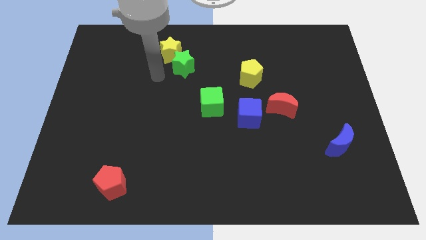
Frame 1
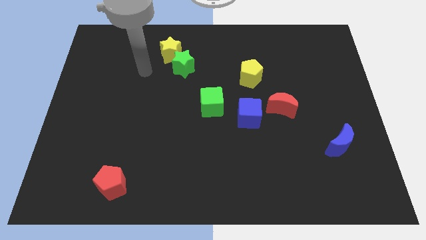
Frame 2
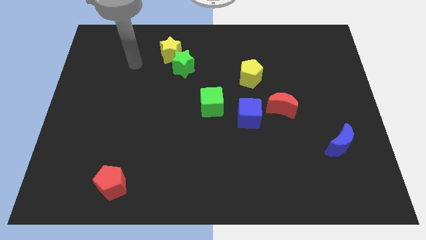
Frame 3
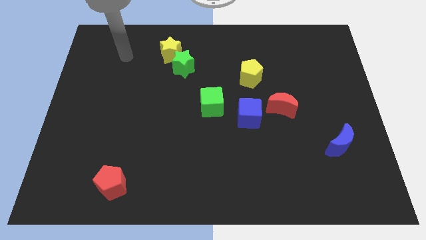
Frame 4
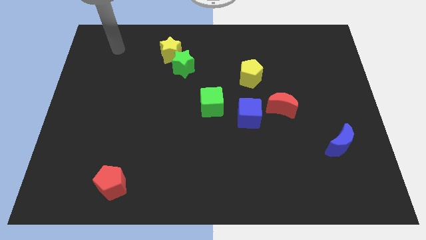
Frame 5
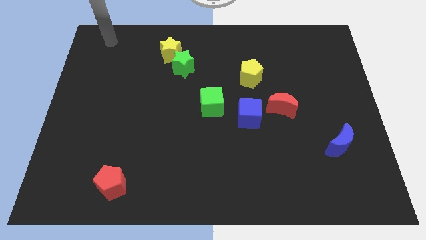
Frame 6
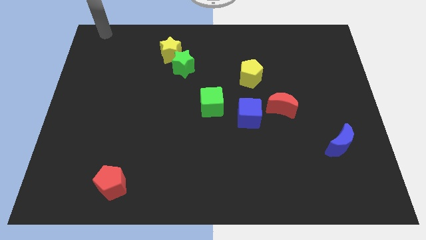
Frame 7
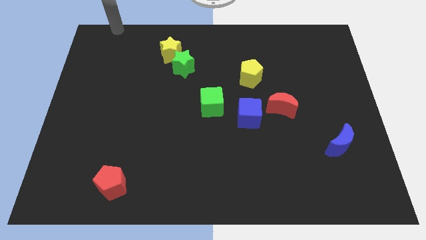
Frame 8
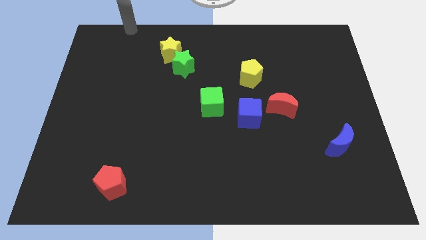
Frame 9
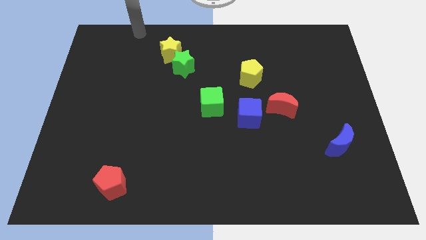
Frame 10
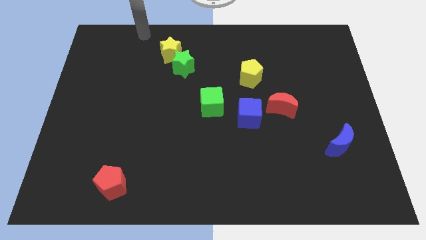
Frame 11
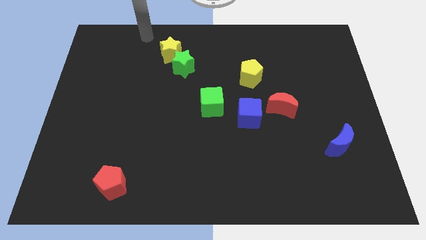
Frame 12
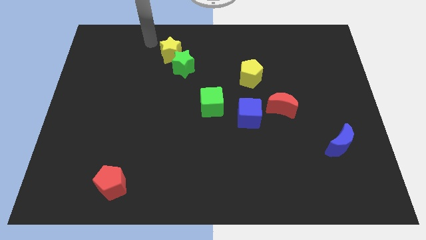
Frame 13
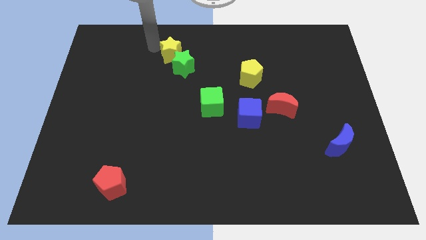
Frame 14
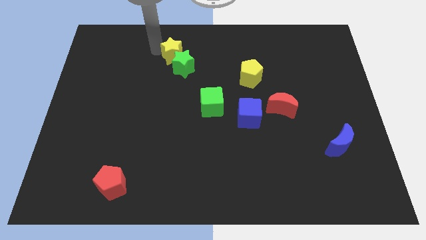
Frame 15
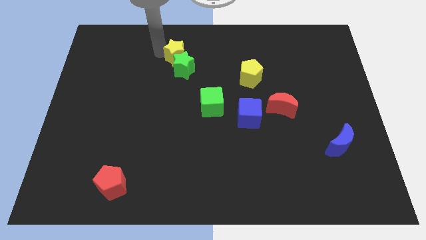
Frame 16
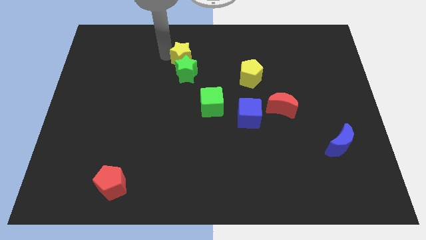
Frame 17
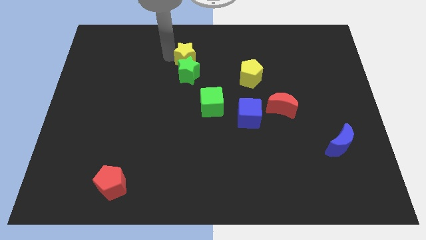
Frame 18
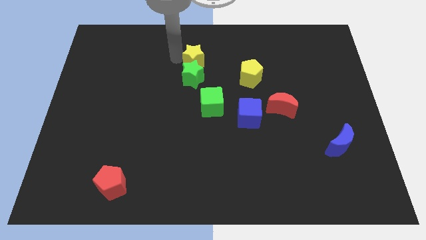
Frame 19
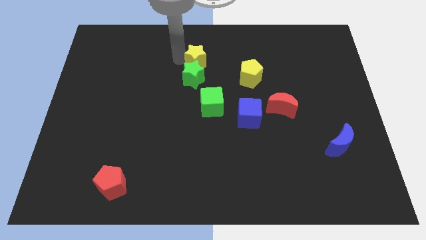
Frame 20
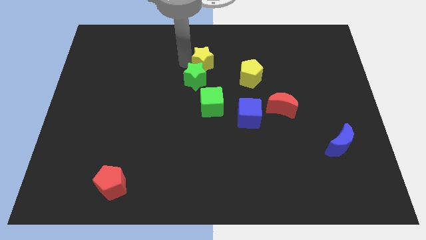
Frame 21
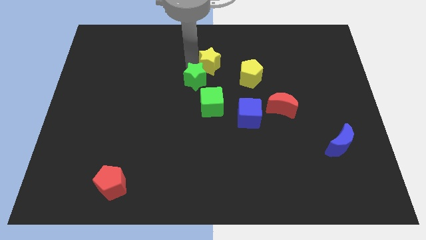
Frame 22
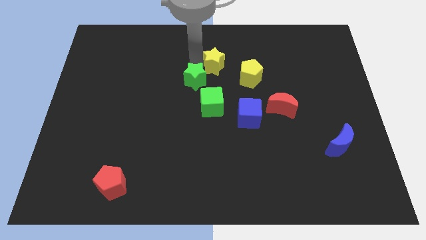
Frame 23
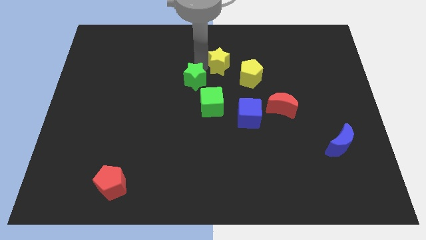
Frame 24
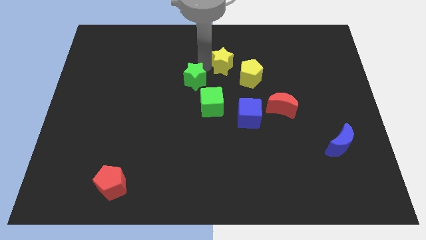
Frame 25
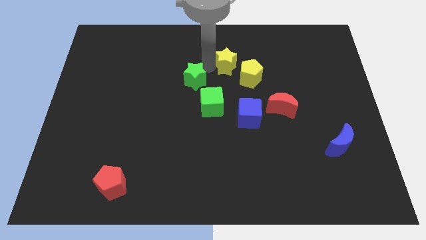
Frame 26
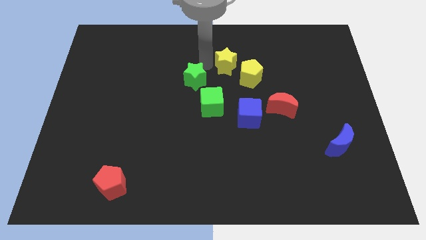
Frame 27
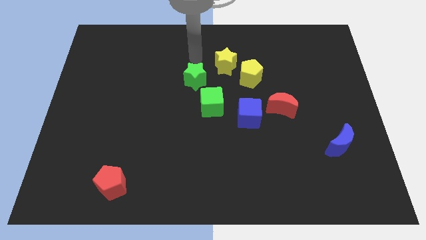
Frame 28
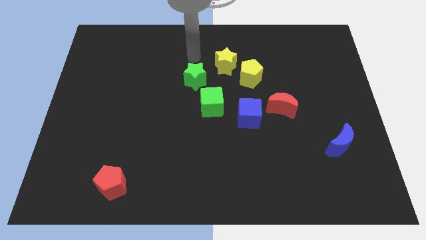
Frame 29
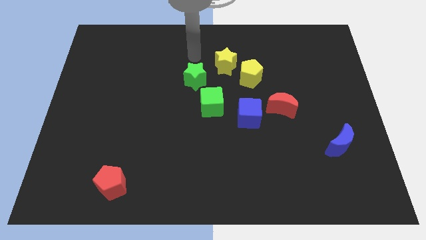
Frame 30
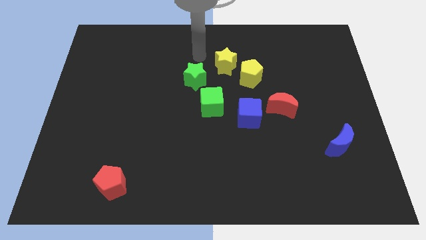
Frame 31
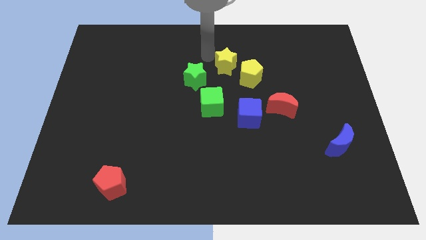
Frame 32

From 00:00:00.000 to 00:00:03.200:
move yellow star away from the green star

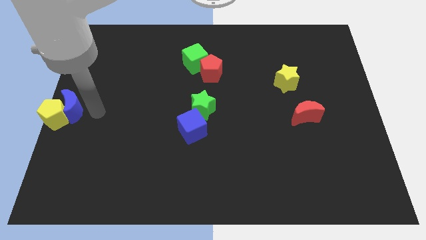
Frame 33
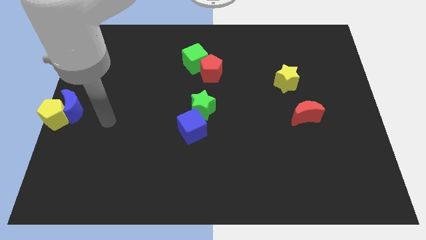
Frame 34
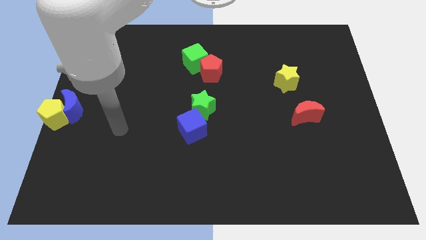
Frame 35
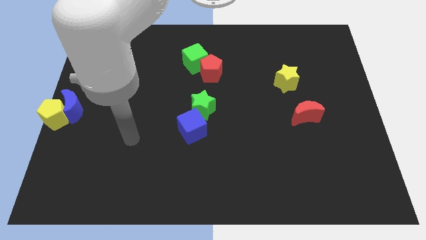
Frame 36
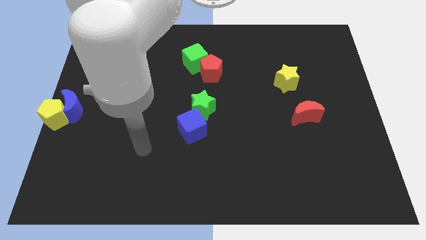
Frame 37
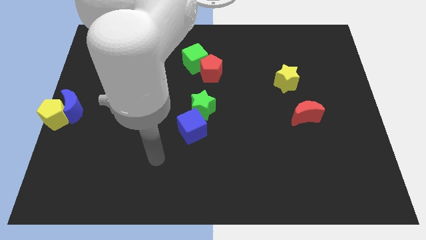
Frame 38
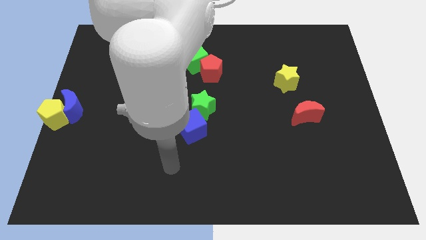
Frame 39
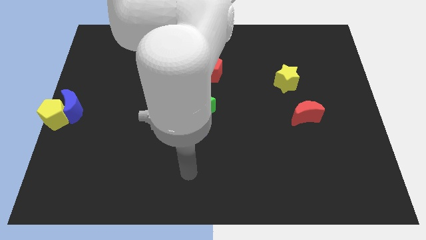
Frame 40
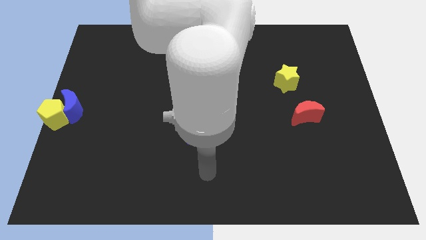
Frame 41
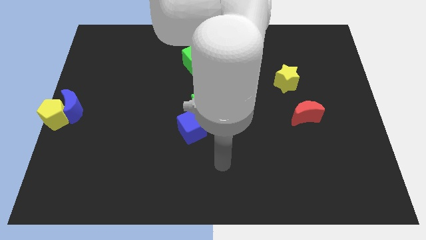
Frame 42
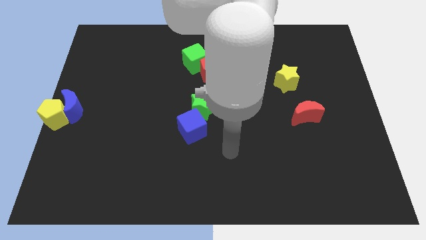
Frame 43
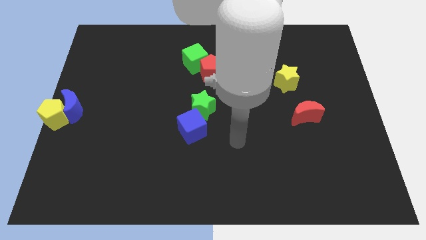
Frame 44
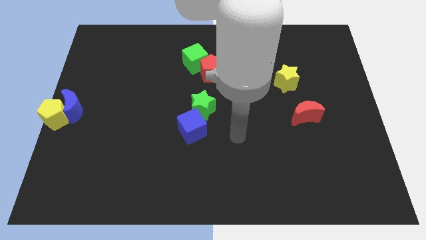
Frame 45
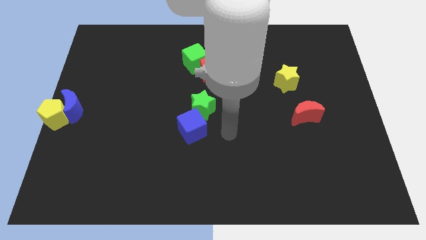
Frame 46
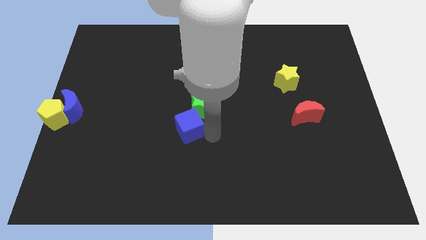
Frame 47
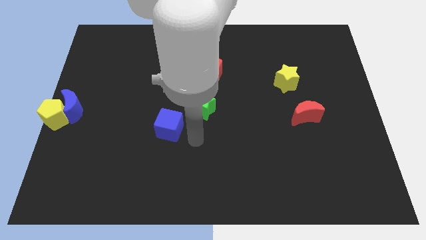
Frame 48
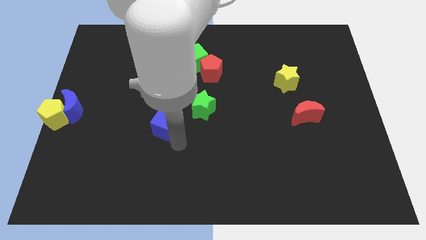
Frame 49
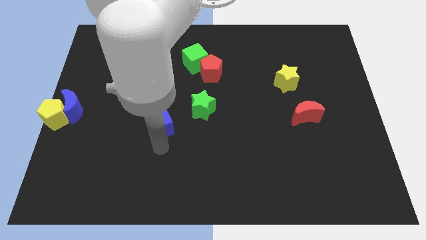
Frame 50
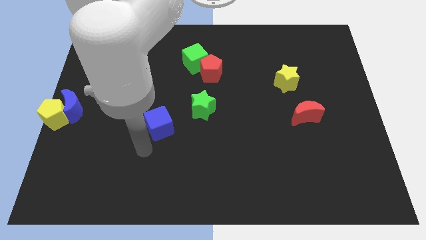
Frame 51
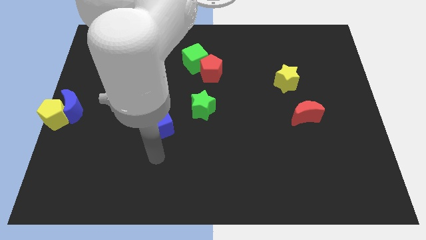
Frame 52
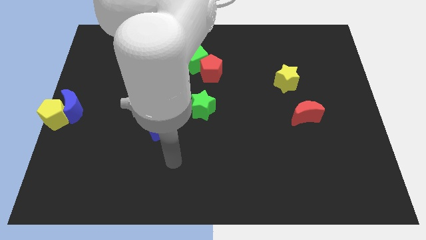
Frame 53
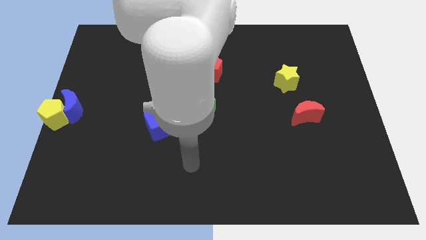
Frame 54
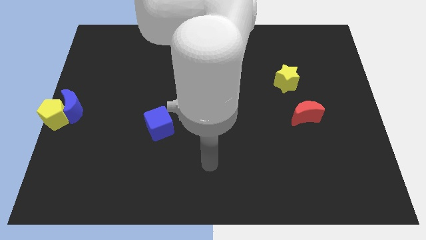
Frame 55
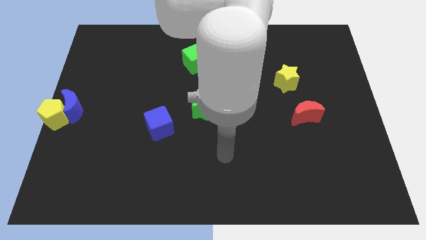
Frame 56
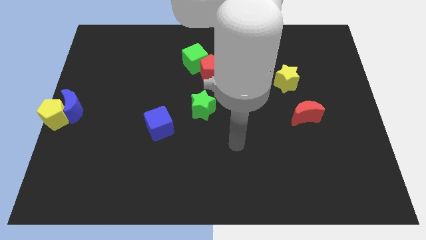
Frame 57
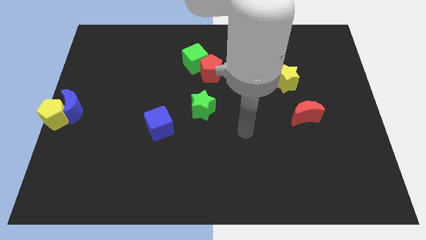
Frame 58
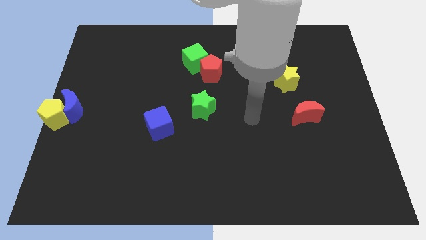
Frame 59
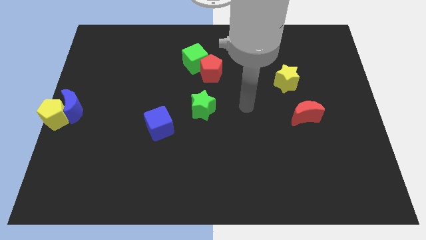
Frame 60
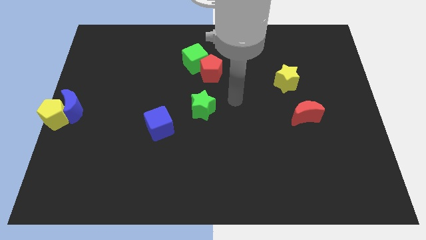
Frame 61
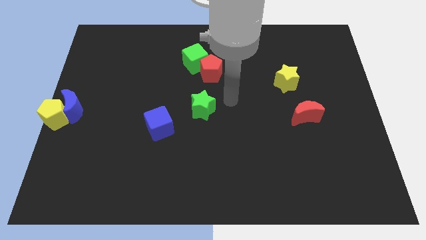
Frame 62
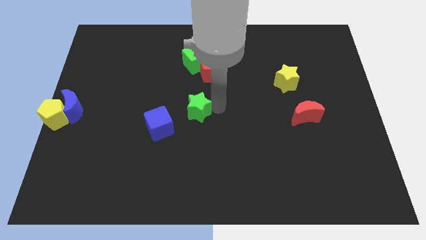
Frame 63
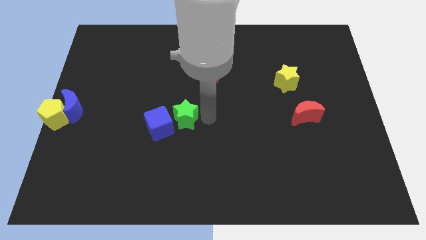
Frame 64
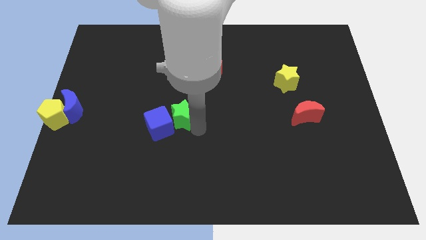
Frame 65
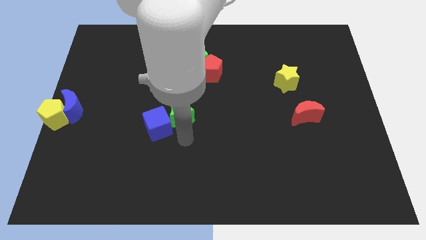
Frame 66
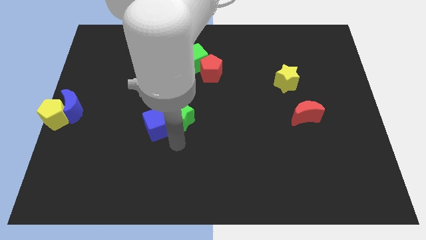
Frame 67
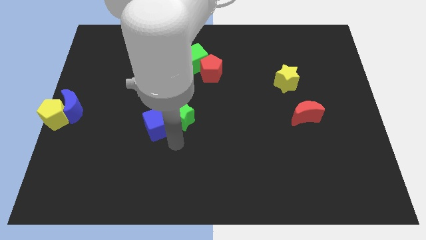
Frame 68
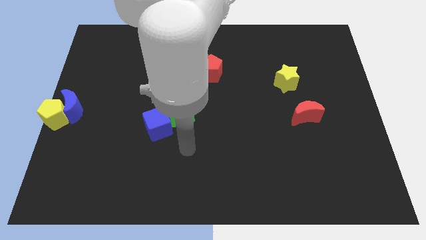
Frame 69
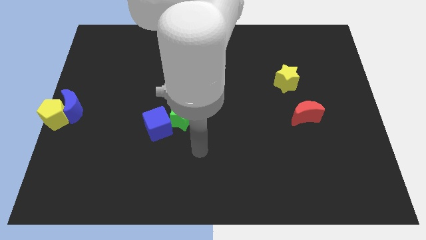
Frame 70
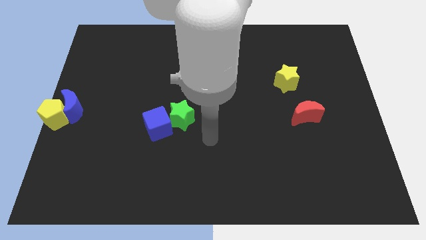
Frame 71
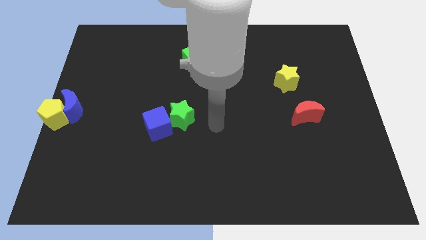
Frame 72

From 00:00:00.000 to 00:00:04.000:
move the green star beside the right side to the blue cube

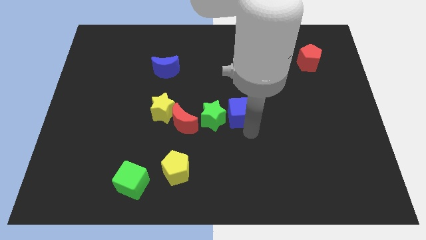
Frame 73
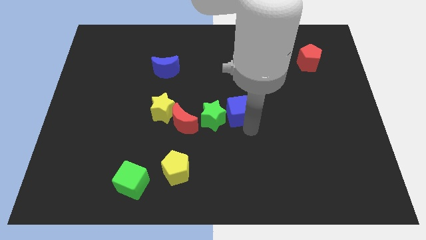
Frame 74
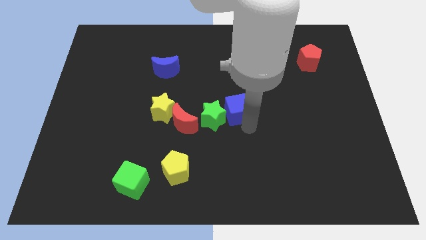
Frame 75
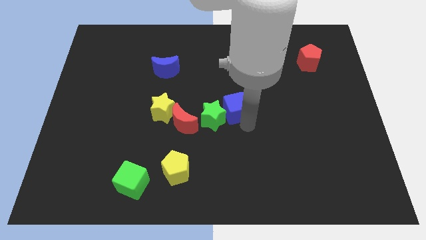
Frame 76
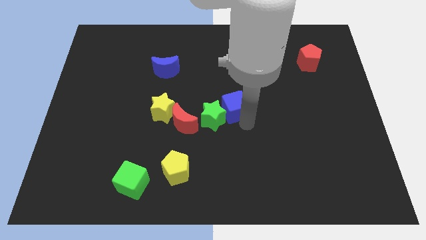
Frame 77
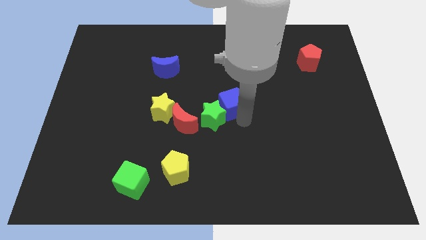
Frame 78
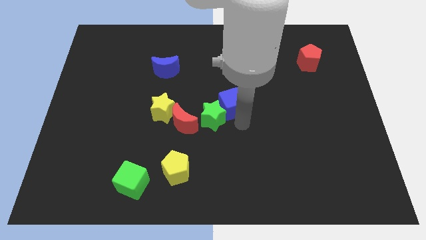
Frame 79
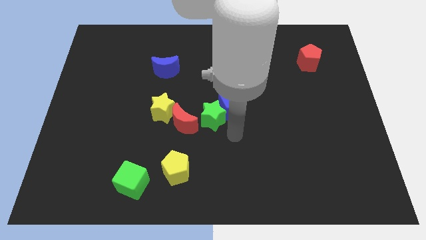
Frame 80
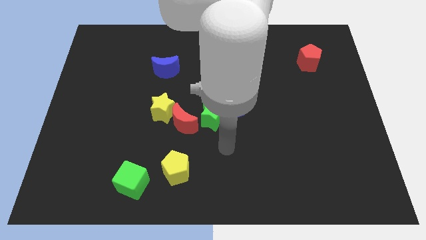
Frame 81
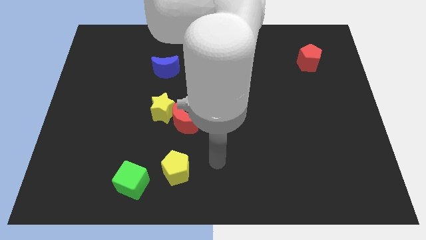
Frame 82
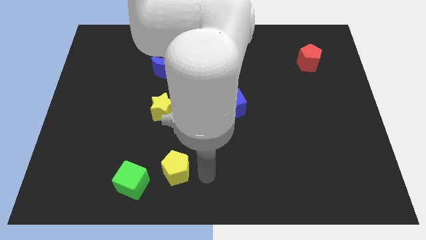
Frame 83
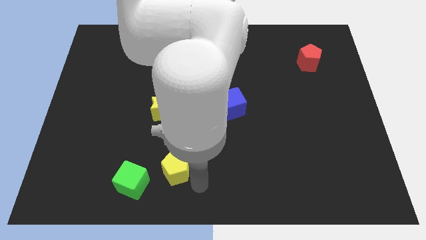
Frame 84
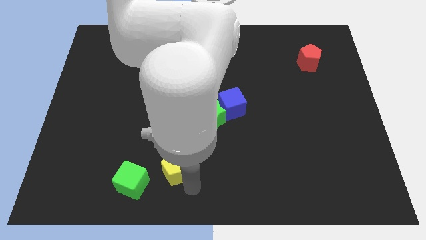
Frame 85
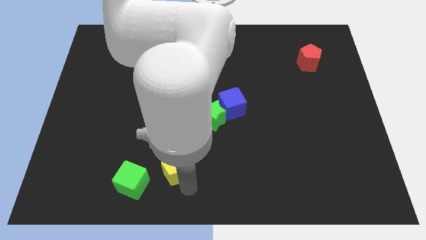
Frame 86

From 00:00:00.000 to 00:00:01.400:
slide the blue cube diagonally top right to the green star

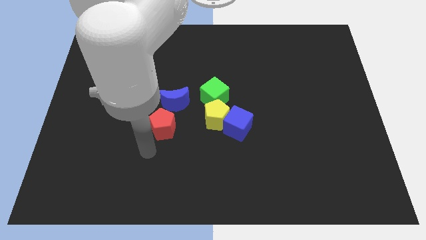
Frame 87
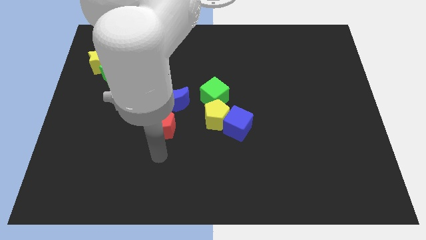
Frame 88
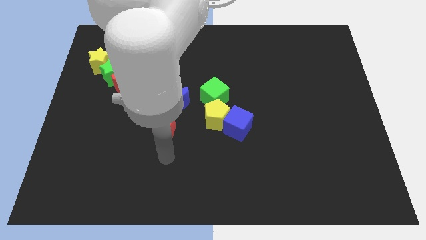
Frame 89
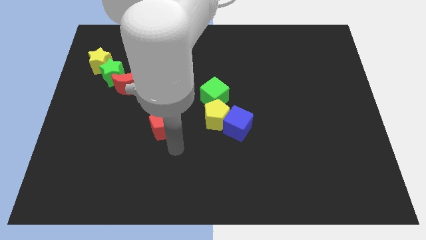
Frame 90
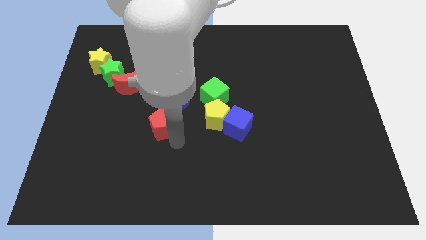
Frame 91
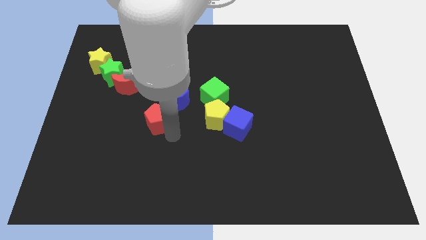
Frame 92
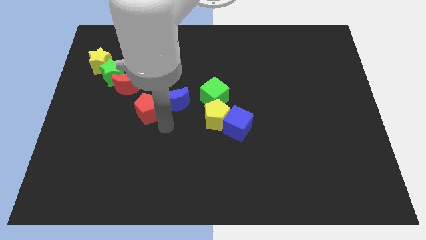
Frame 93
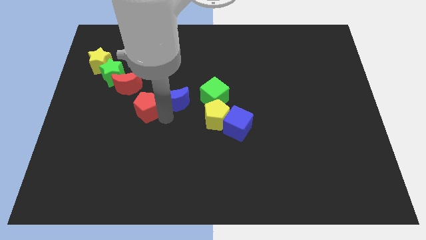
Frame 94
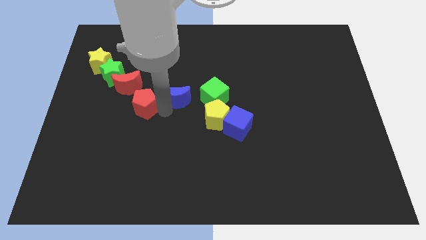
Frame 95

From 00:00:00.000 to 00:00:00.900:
drag red pentagon towards red moon
